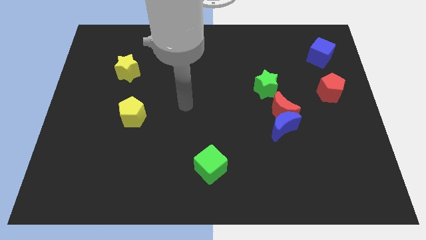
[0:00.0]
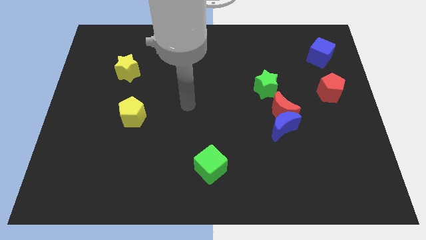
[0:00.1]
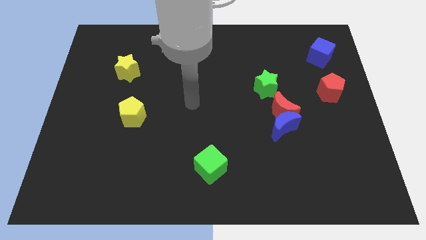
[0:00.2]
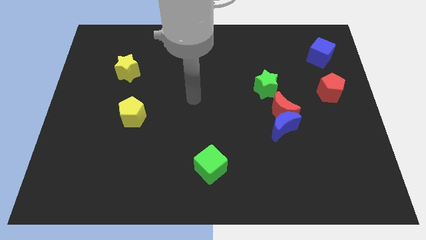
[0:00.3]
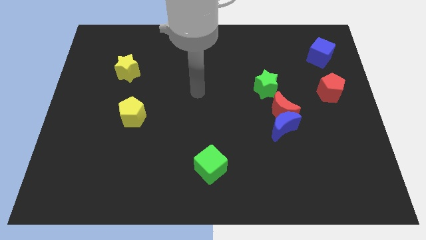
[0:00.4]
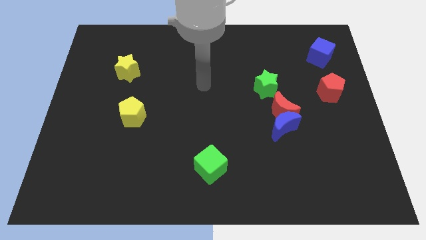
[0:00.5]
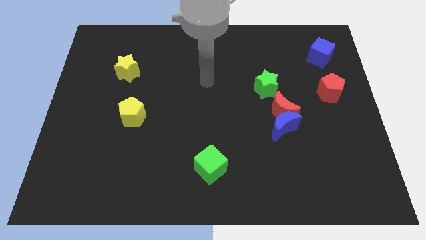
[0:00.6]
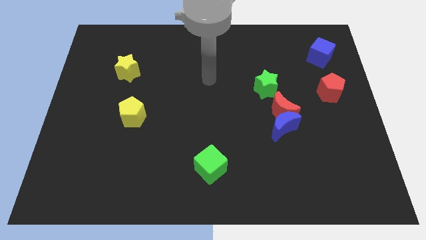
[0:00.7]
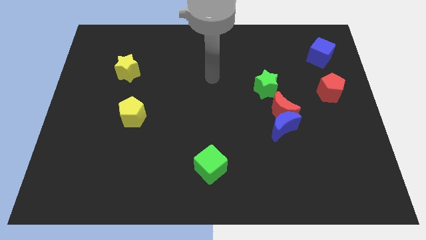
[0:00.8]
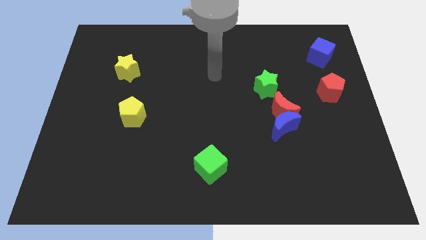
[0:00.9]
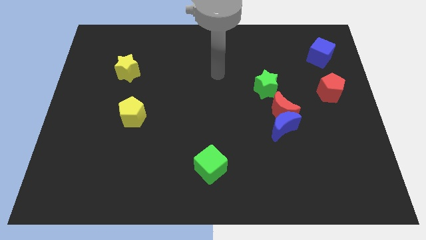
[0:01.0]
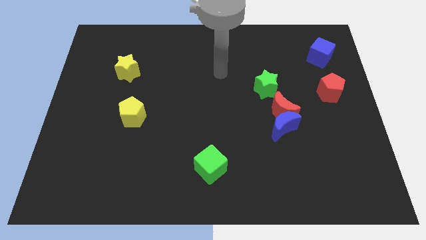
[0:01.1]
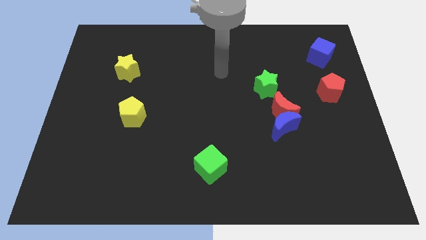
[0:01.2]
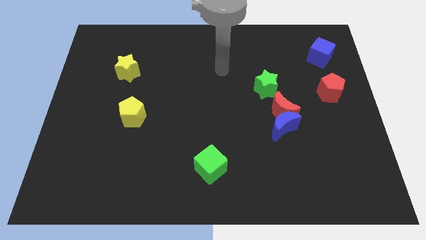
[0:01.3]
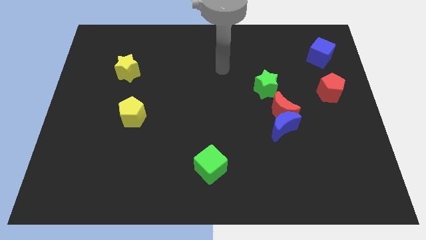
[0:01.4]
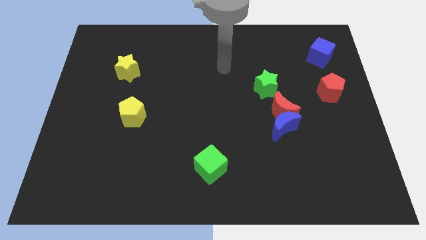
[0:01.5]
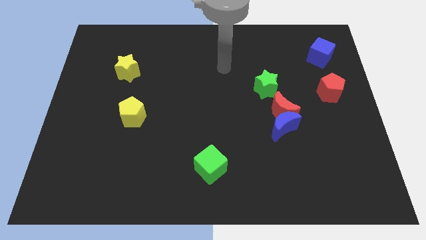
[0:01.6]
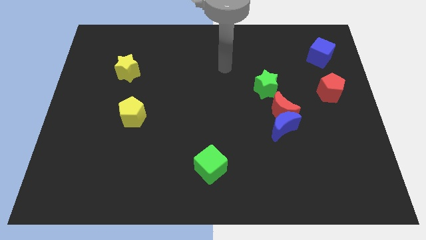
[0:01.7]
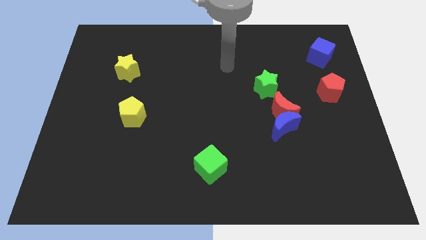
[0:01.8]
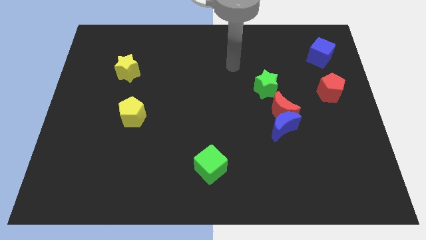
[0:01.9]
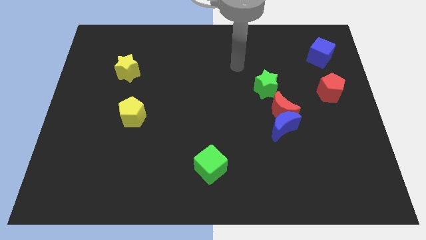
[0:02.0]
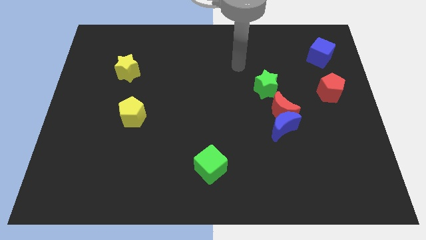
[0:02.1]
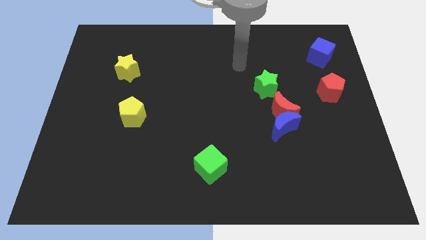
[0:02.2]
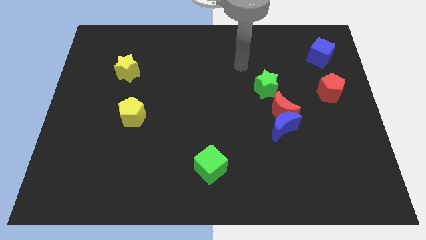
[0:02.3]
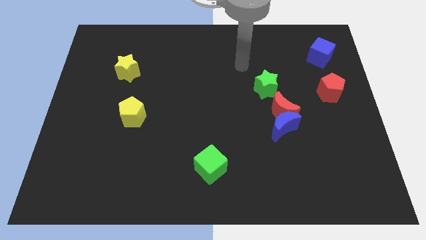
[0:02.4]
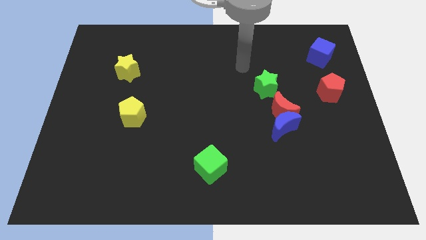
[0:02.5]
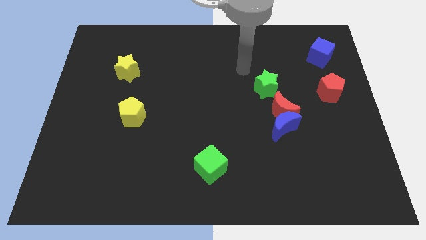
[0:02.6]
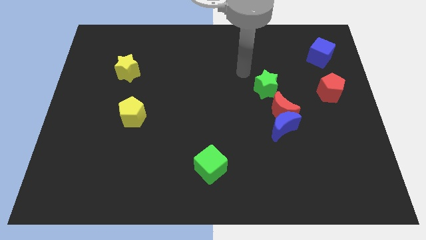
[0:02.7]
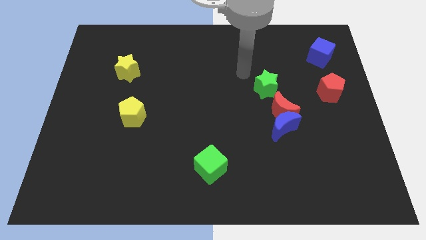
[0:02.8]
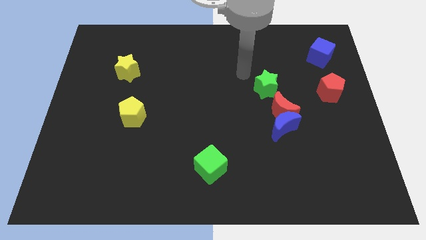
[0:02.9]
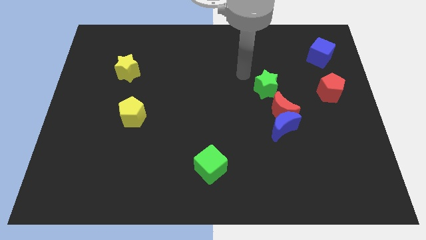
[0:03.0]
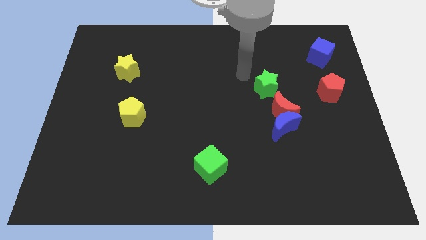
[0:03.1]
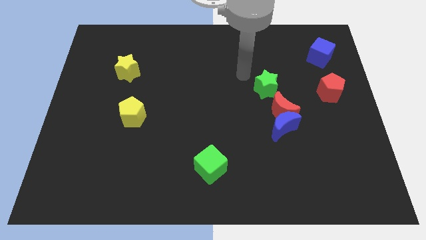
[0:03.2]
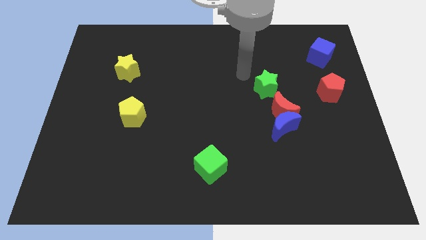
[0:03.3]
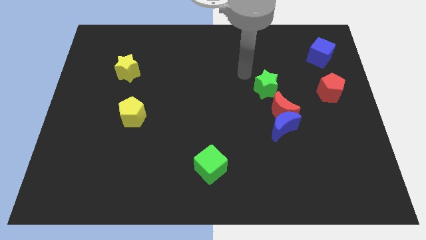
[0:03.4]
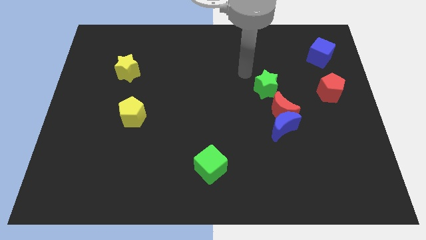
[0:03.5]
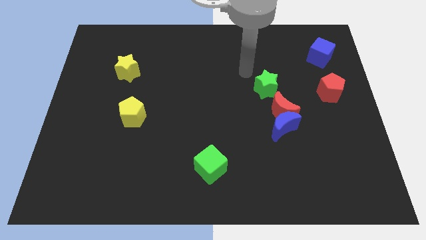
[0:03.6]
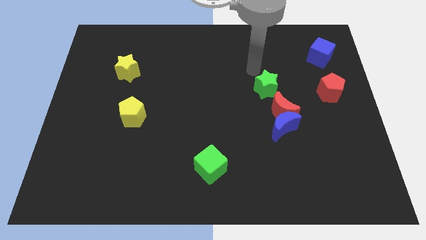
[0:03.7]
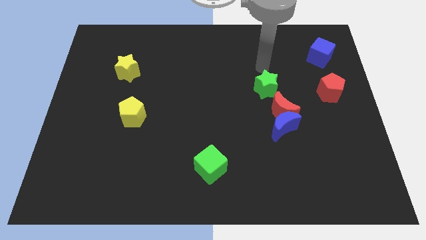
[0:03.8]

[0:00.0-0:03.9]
point your arm at the top of the green star

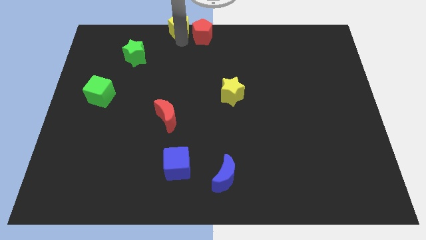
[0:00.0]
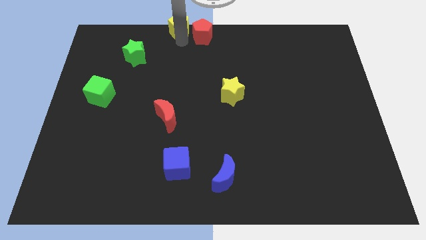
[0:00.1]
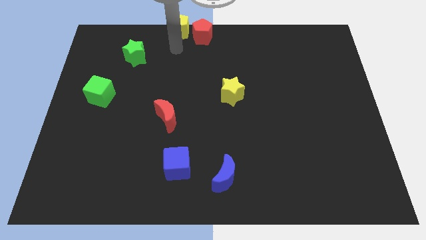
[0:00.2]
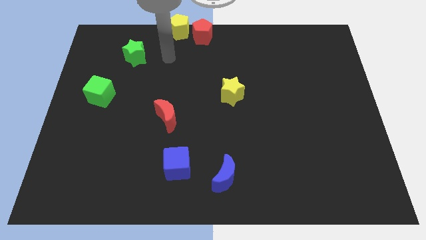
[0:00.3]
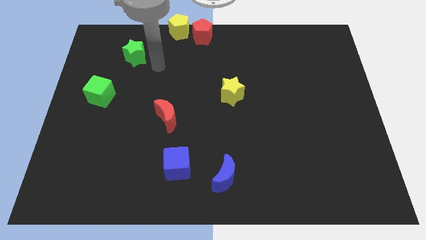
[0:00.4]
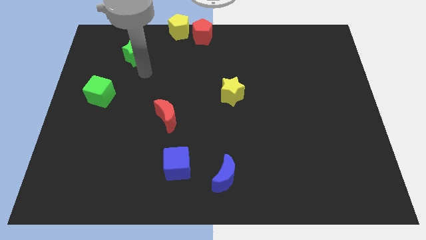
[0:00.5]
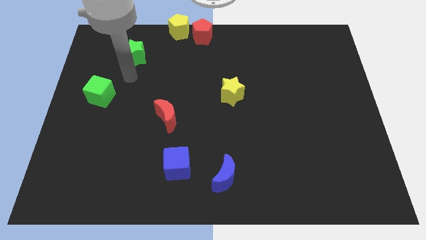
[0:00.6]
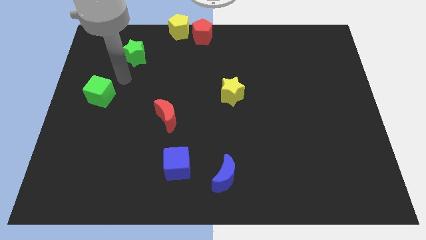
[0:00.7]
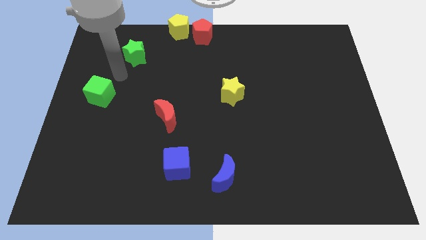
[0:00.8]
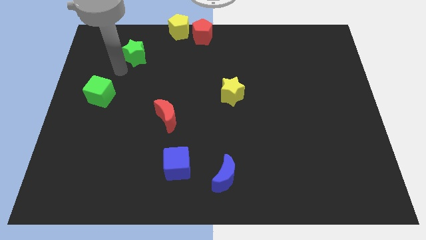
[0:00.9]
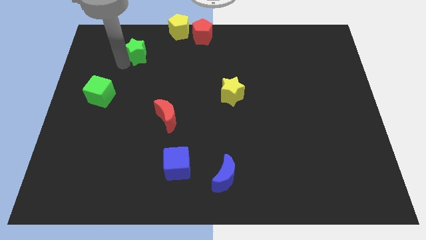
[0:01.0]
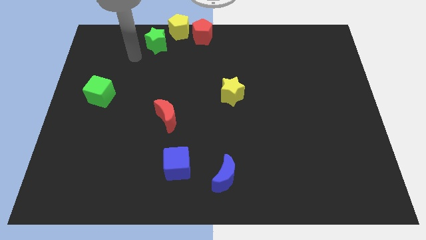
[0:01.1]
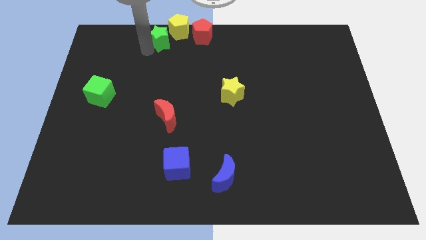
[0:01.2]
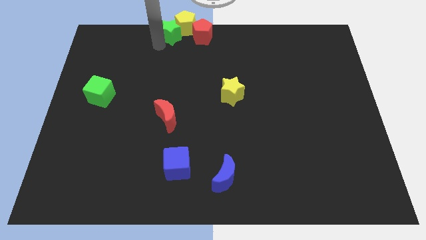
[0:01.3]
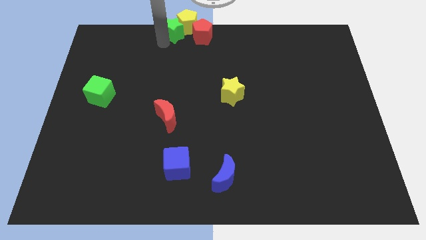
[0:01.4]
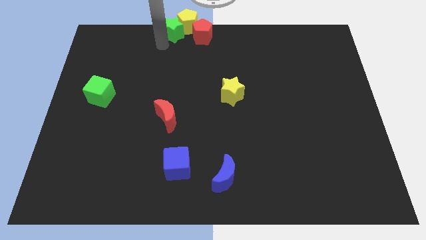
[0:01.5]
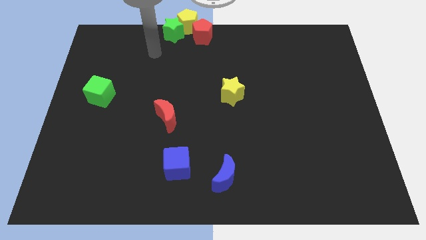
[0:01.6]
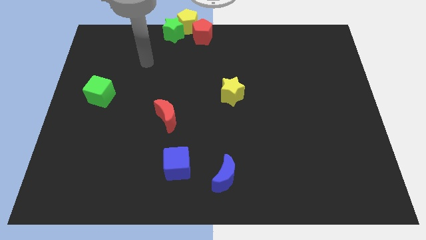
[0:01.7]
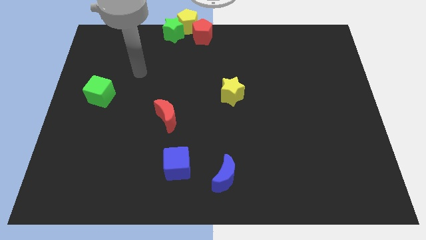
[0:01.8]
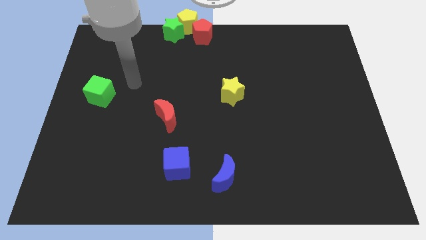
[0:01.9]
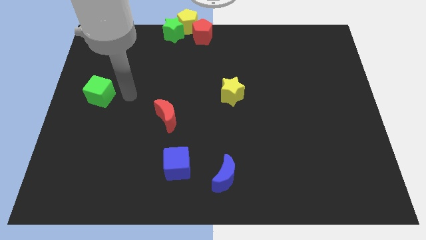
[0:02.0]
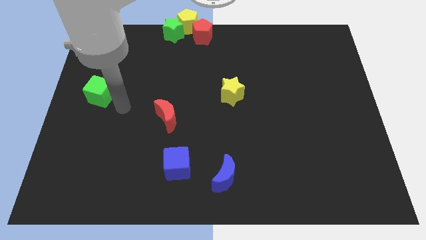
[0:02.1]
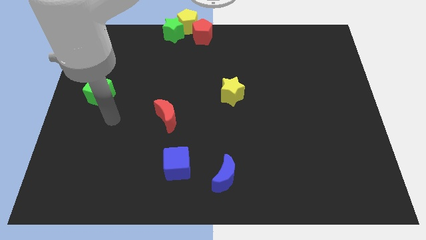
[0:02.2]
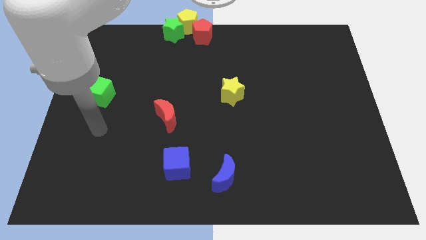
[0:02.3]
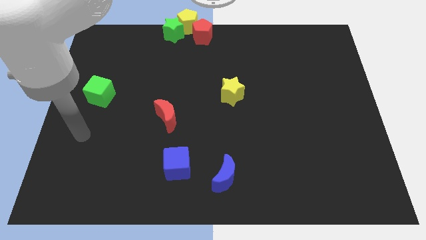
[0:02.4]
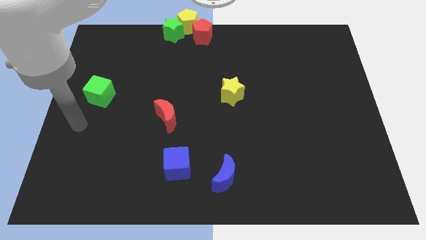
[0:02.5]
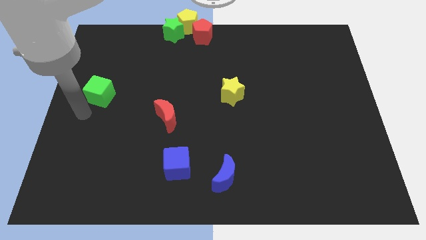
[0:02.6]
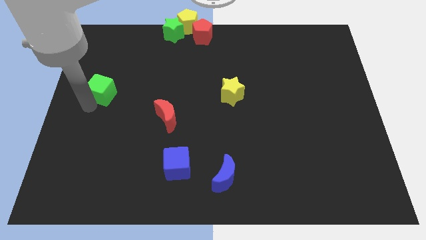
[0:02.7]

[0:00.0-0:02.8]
place the arm down to the green cube

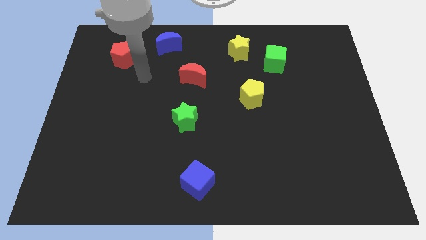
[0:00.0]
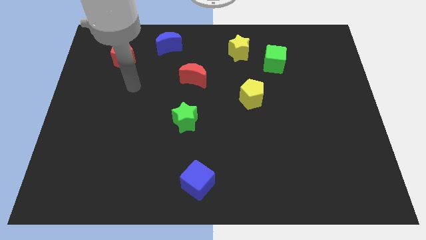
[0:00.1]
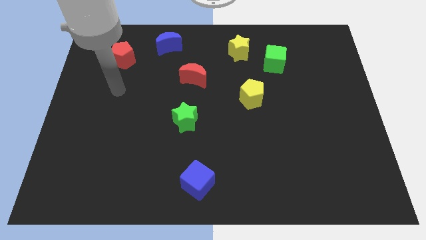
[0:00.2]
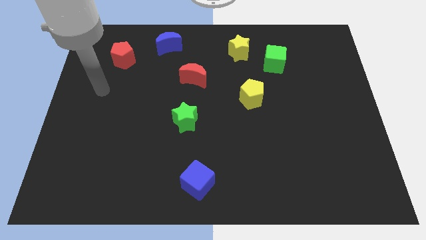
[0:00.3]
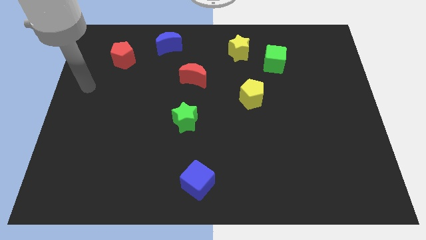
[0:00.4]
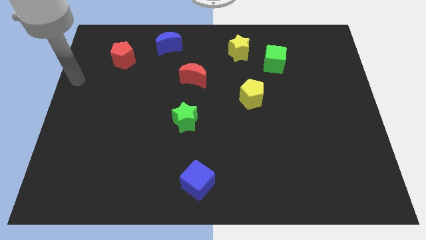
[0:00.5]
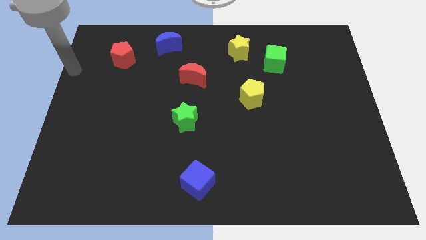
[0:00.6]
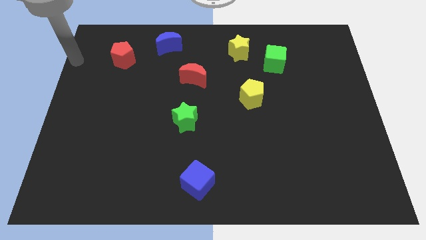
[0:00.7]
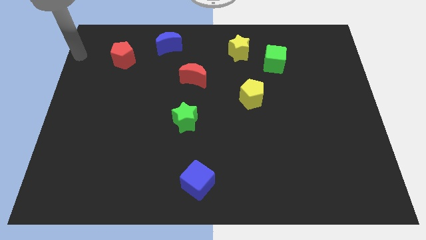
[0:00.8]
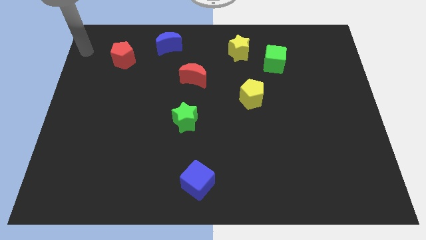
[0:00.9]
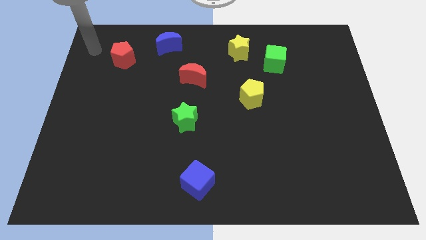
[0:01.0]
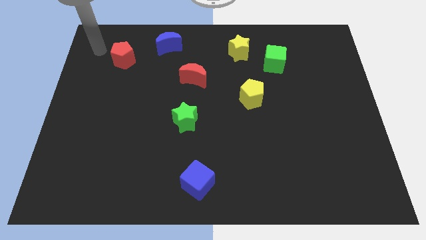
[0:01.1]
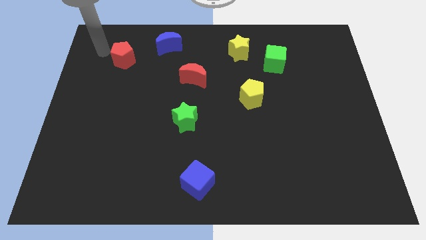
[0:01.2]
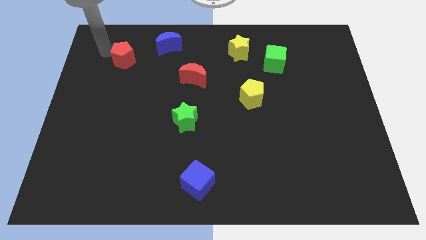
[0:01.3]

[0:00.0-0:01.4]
point your arm at the top left side of the red pentagon

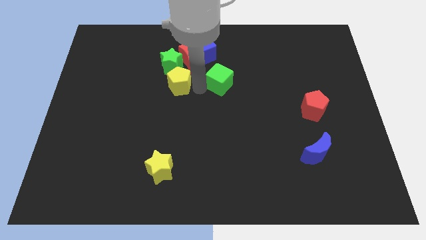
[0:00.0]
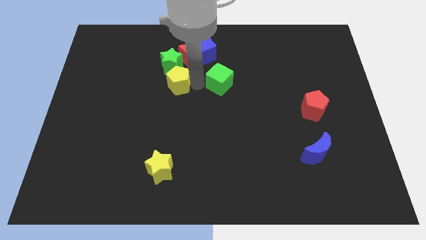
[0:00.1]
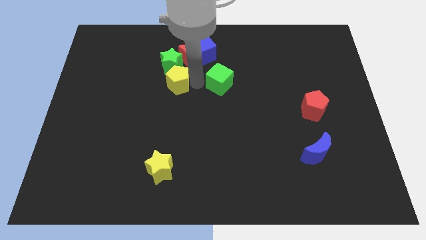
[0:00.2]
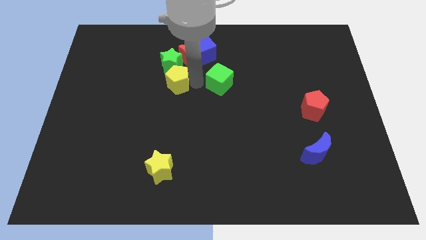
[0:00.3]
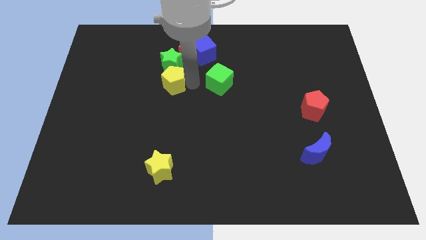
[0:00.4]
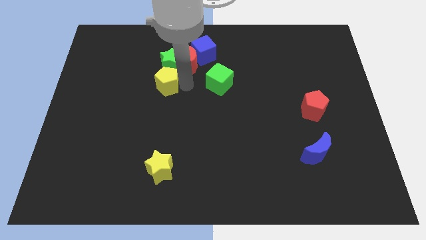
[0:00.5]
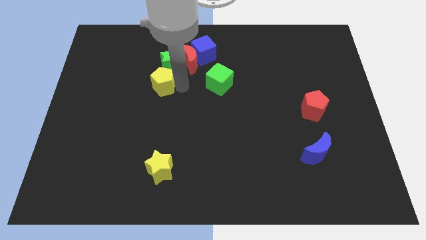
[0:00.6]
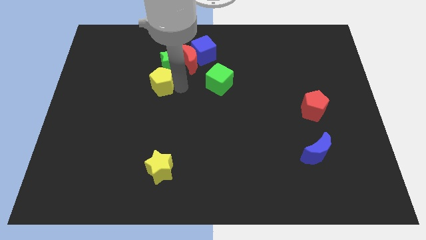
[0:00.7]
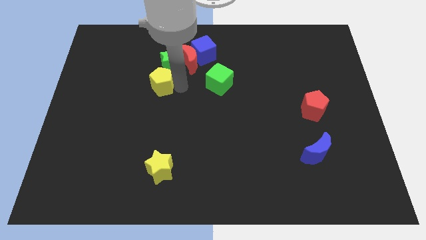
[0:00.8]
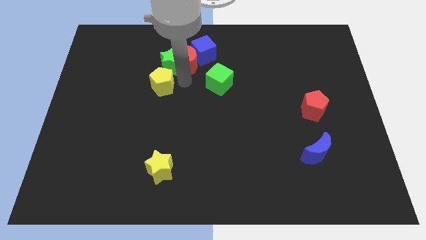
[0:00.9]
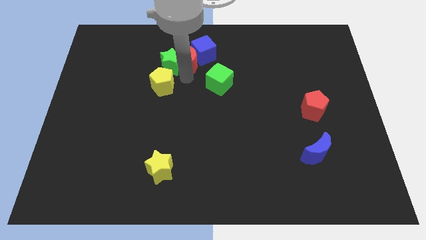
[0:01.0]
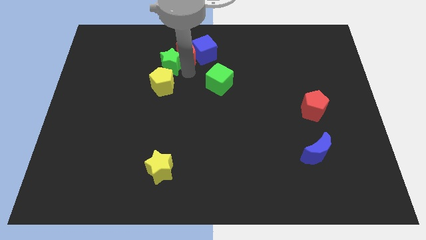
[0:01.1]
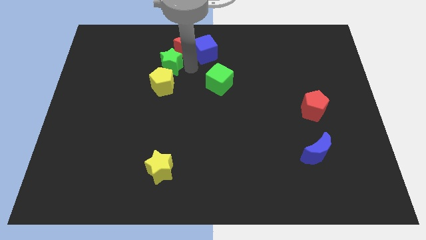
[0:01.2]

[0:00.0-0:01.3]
move the yellow pentagon to the bottom left side of the green star
